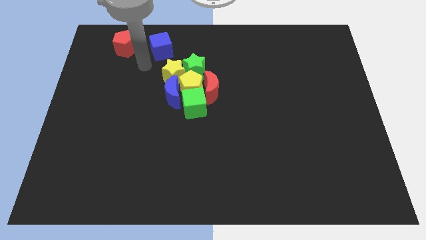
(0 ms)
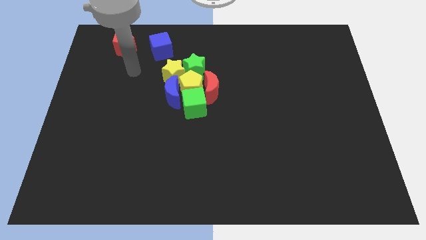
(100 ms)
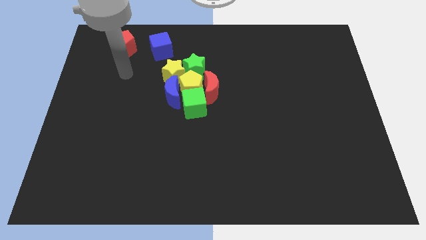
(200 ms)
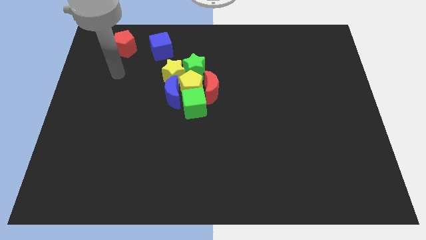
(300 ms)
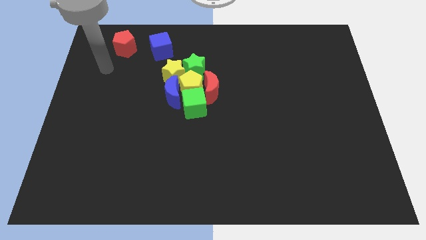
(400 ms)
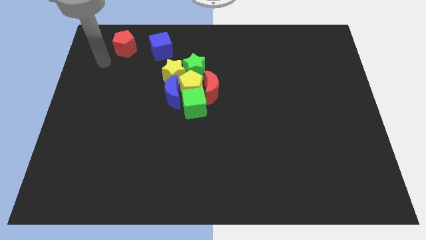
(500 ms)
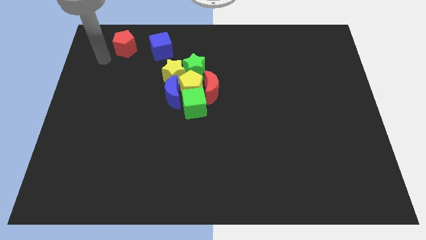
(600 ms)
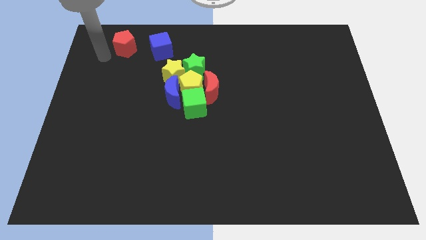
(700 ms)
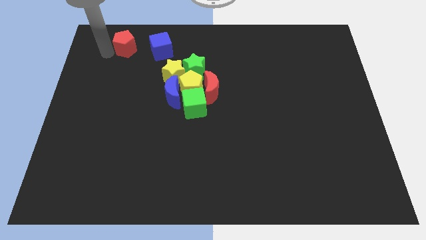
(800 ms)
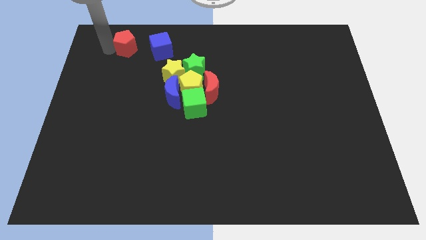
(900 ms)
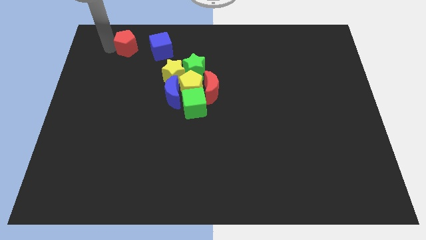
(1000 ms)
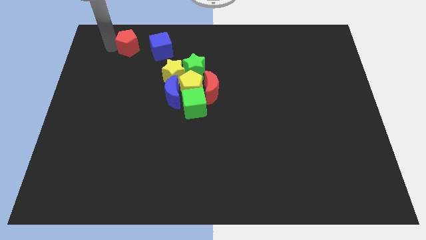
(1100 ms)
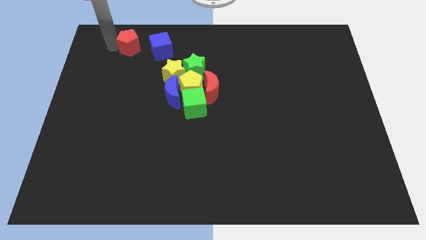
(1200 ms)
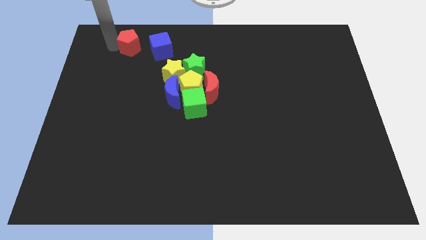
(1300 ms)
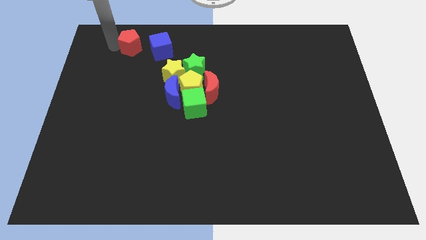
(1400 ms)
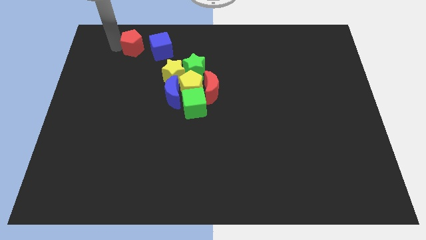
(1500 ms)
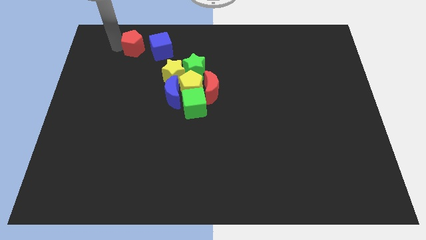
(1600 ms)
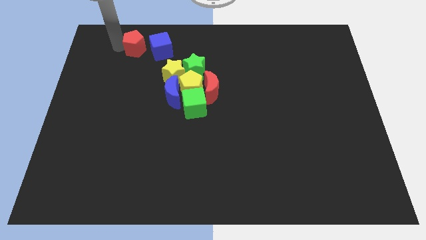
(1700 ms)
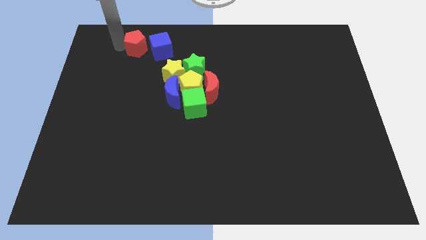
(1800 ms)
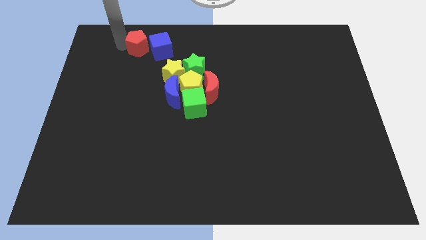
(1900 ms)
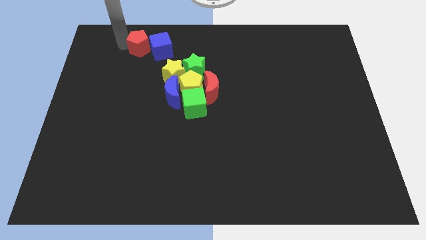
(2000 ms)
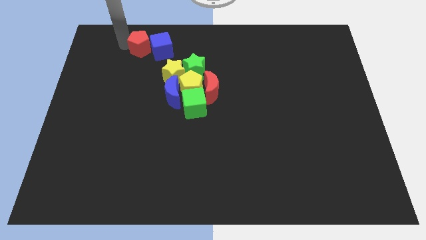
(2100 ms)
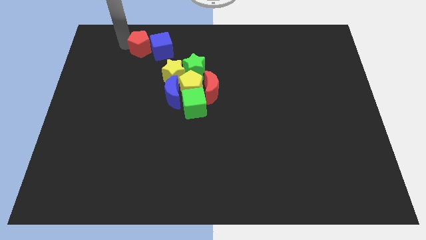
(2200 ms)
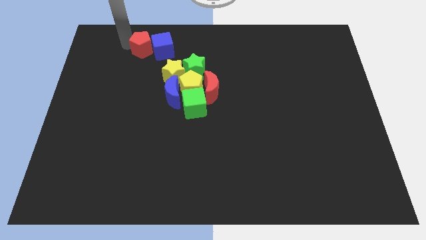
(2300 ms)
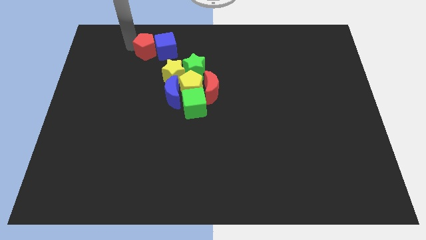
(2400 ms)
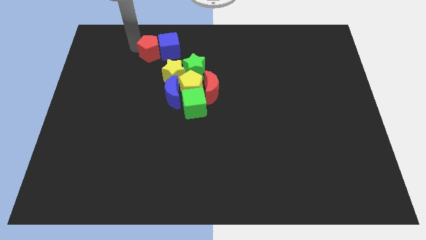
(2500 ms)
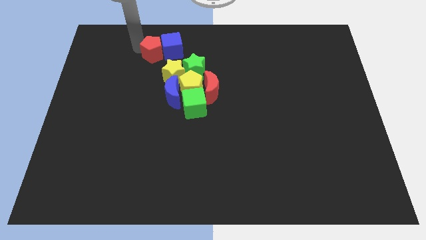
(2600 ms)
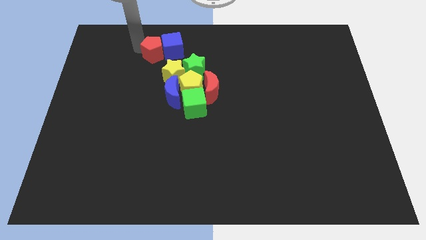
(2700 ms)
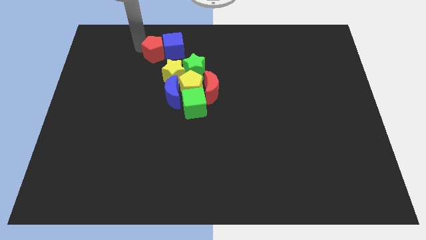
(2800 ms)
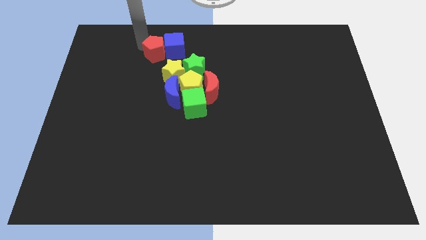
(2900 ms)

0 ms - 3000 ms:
push the red pentagon into the left of the blue cube

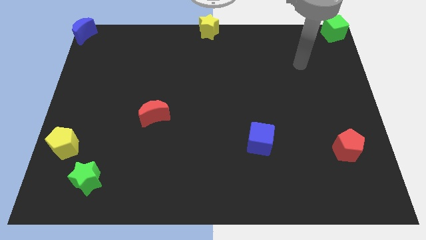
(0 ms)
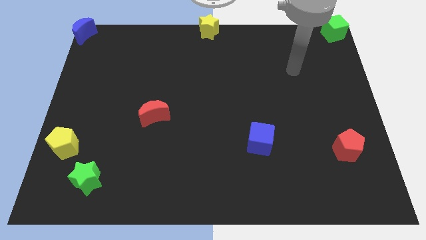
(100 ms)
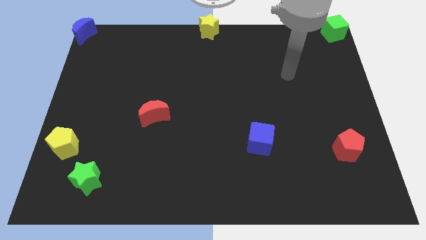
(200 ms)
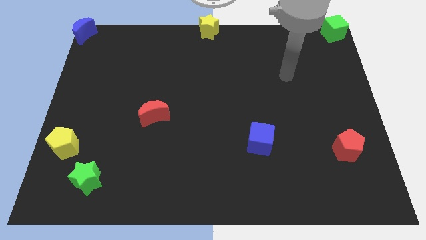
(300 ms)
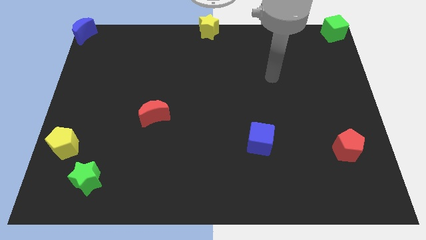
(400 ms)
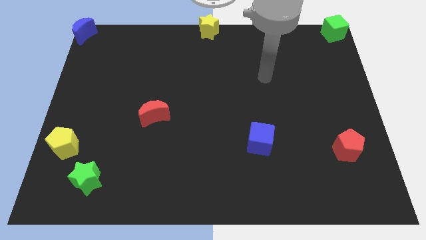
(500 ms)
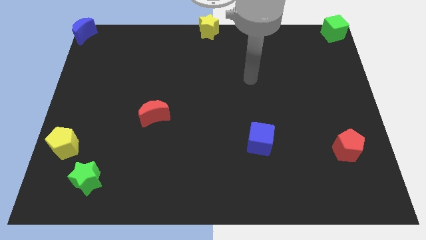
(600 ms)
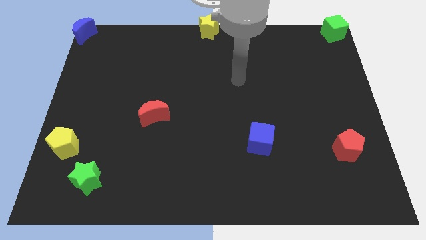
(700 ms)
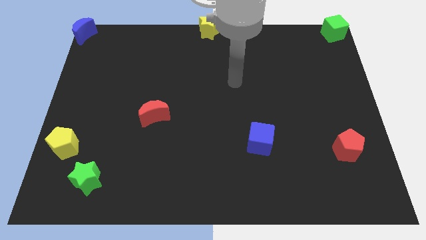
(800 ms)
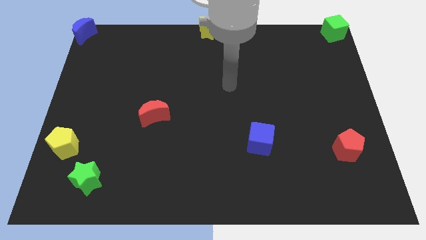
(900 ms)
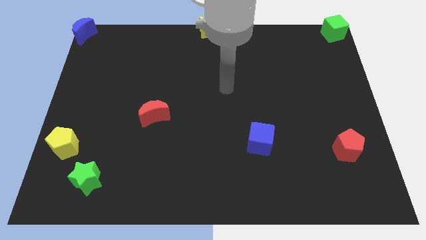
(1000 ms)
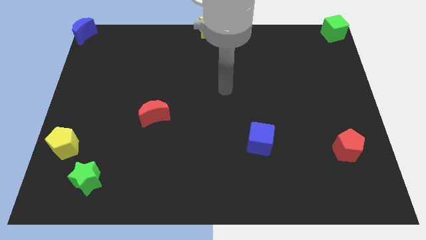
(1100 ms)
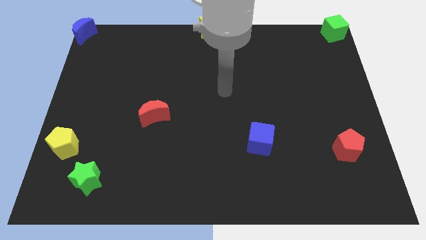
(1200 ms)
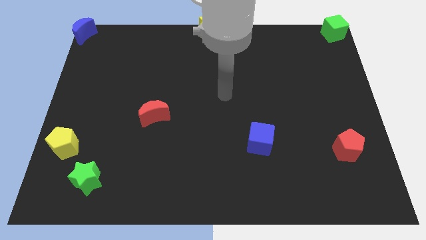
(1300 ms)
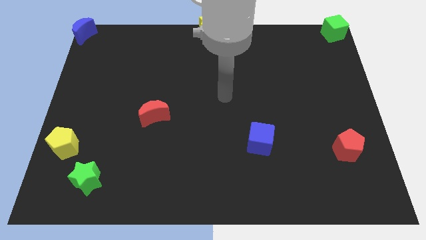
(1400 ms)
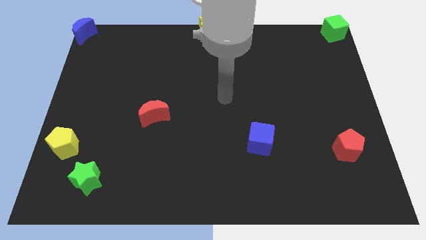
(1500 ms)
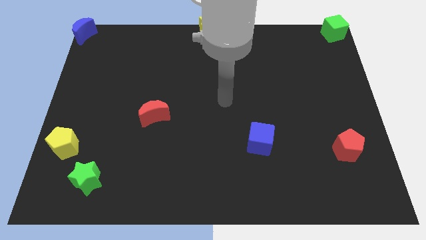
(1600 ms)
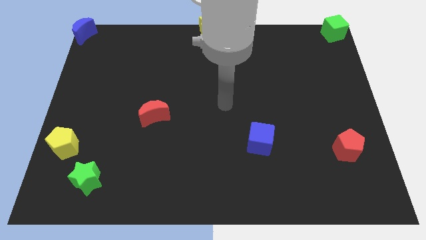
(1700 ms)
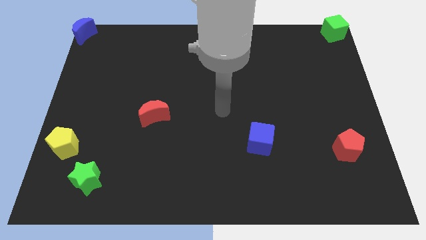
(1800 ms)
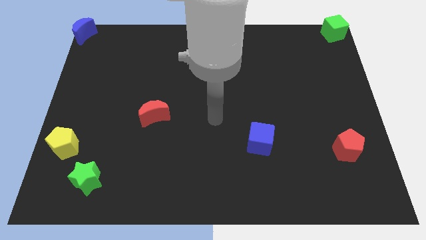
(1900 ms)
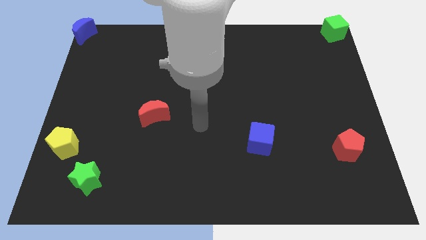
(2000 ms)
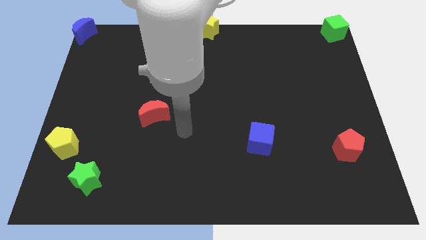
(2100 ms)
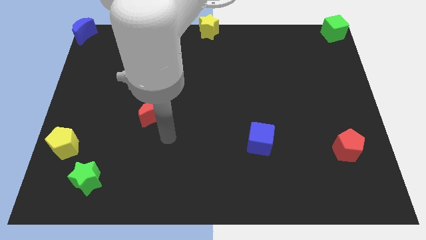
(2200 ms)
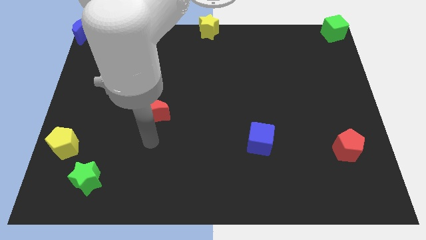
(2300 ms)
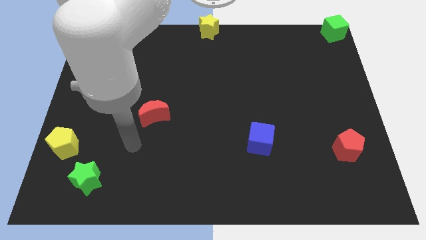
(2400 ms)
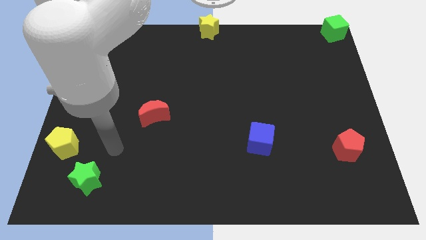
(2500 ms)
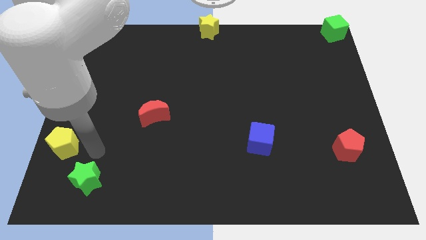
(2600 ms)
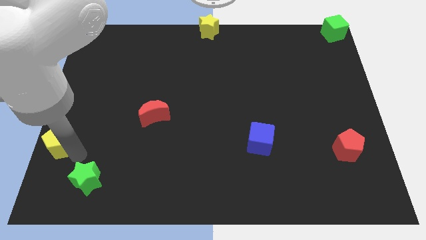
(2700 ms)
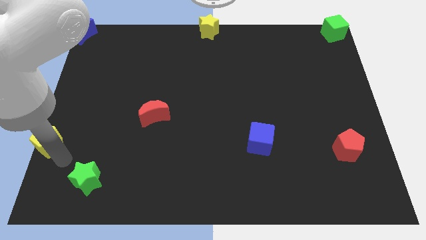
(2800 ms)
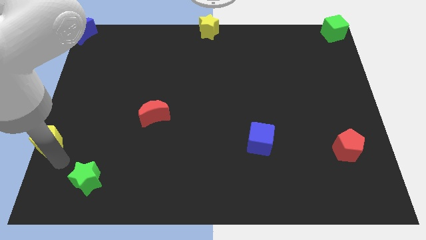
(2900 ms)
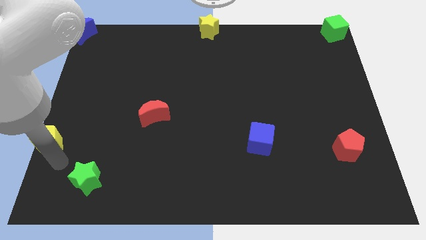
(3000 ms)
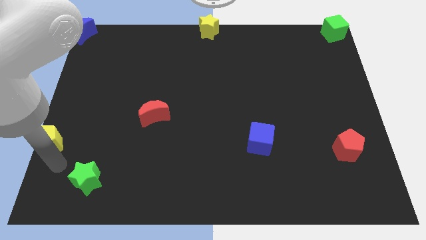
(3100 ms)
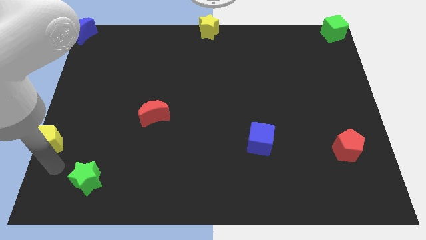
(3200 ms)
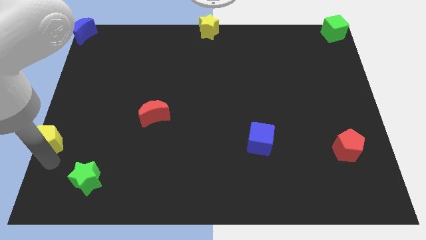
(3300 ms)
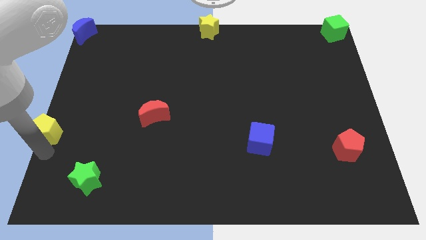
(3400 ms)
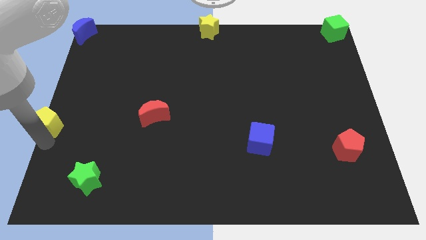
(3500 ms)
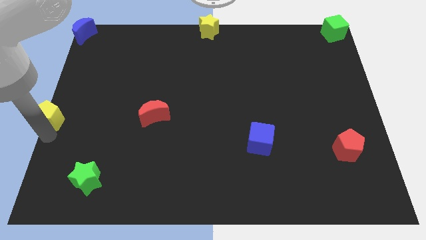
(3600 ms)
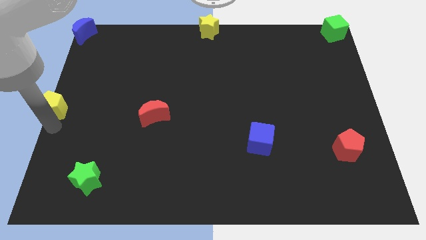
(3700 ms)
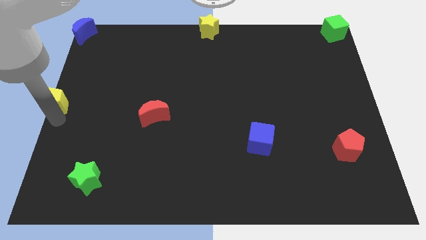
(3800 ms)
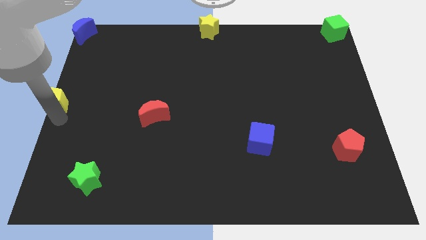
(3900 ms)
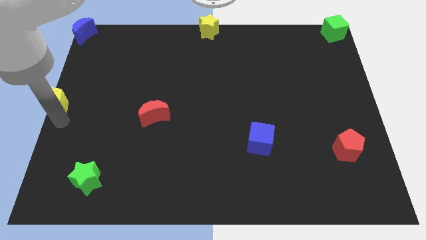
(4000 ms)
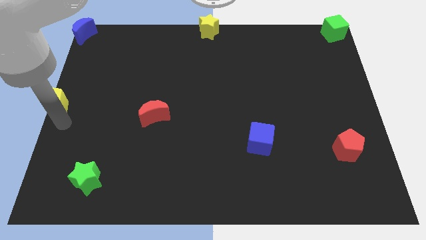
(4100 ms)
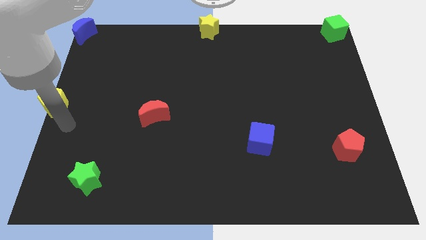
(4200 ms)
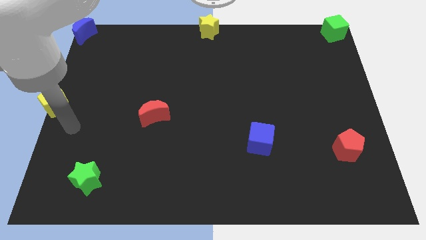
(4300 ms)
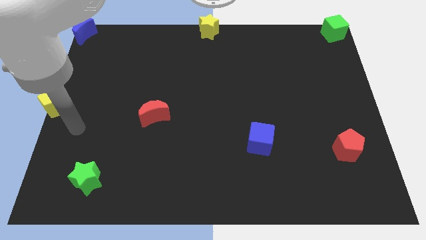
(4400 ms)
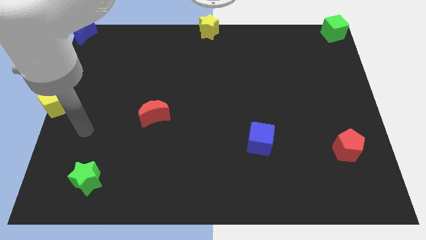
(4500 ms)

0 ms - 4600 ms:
push the yellow pentagon to the left side center of the board

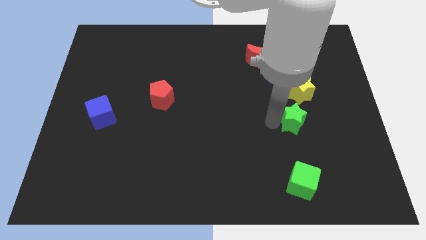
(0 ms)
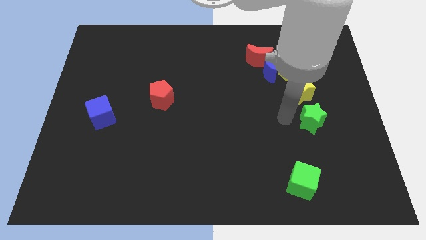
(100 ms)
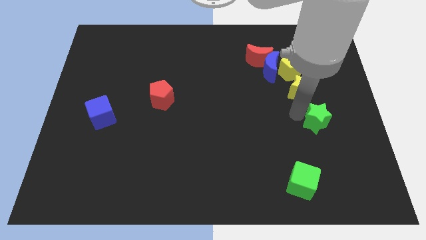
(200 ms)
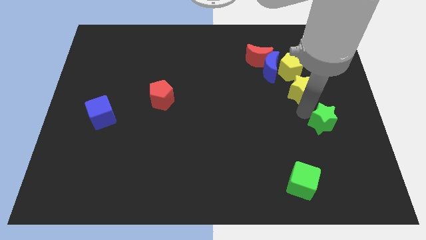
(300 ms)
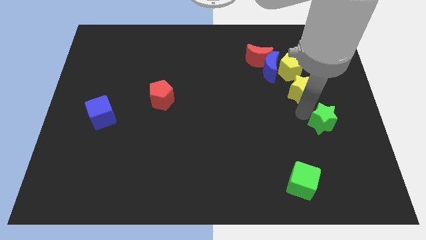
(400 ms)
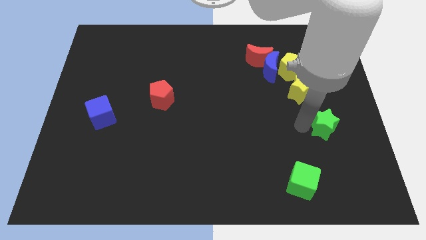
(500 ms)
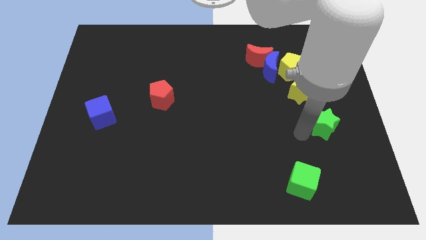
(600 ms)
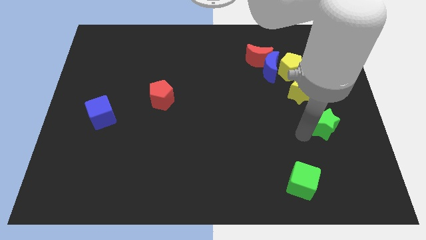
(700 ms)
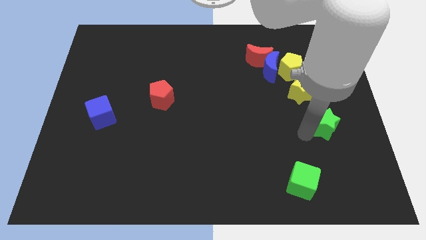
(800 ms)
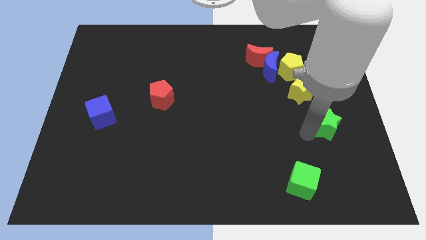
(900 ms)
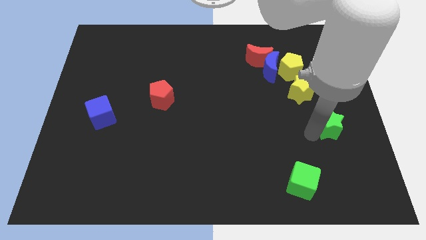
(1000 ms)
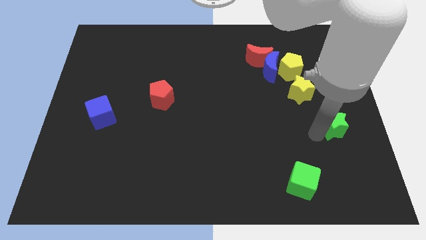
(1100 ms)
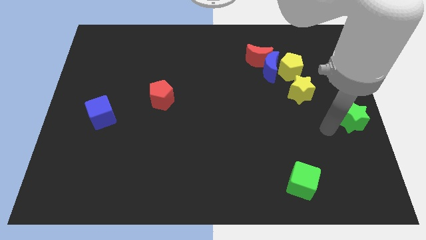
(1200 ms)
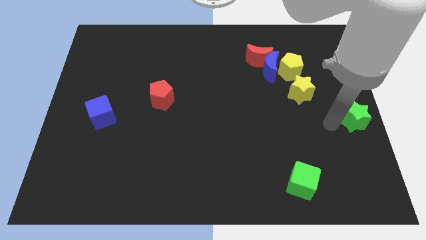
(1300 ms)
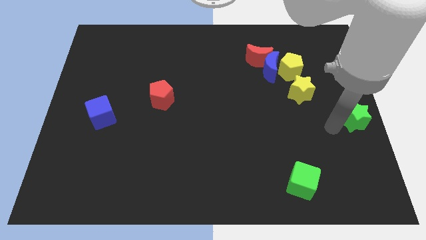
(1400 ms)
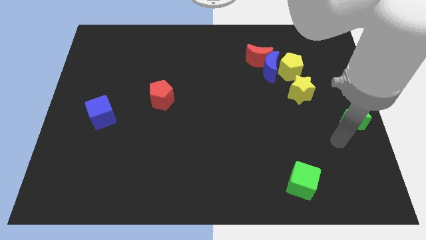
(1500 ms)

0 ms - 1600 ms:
slide the green star diagonally on the top right side of the green cube

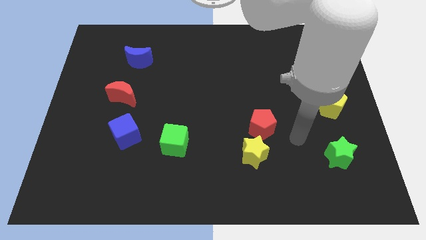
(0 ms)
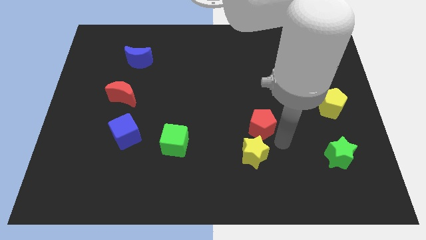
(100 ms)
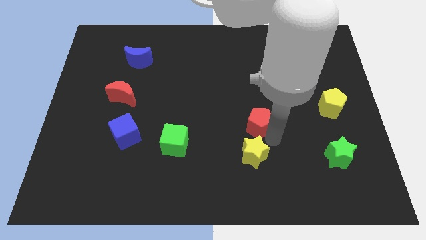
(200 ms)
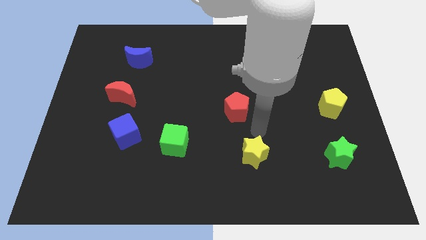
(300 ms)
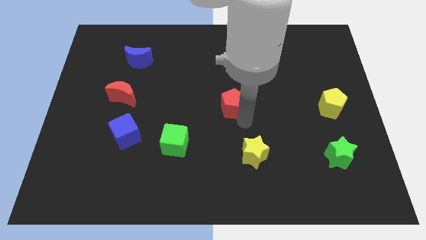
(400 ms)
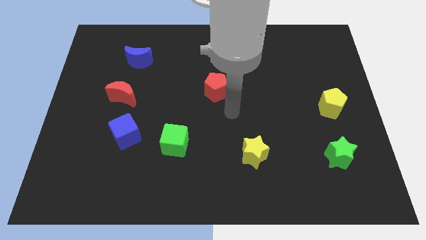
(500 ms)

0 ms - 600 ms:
slide red pentagon to center
